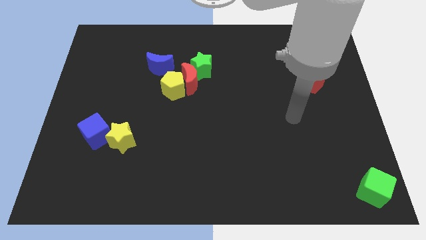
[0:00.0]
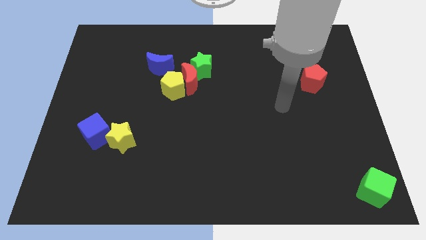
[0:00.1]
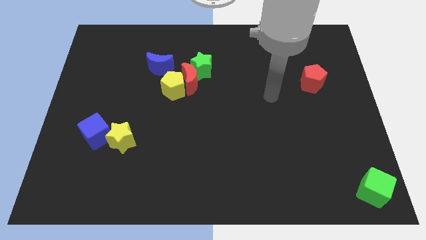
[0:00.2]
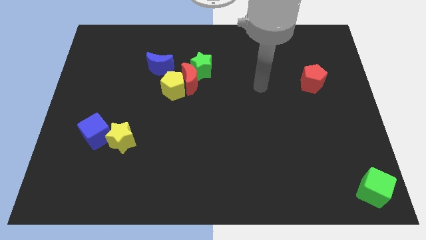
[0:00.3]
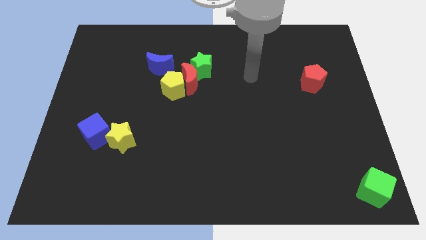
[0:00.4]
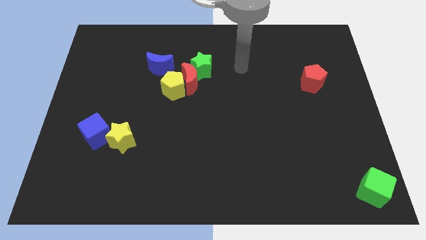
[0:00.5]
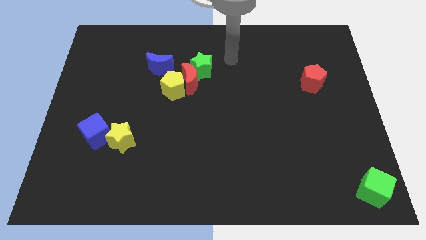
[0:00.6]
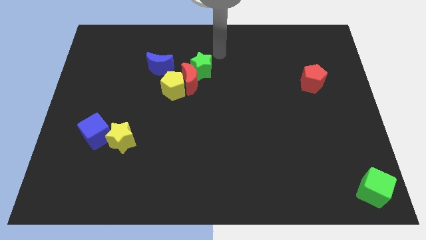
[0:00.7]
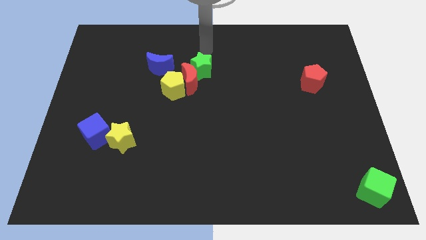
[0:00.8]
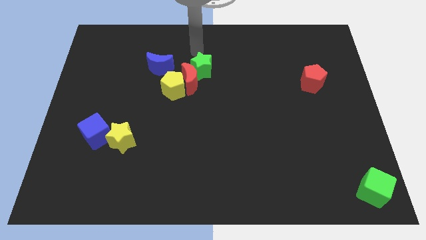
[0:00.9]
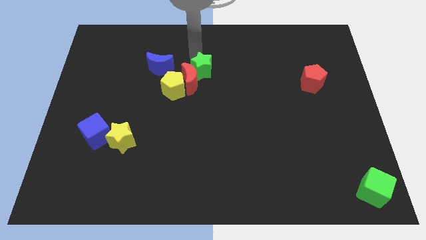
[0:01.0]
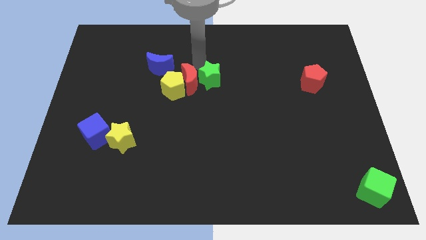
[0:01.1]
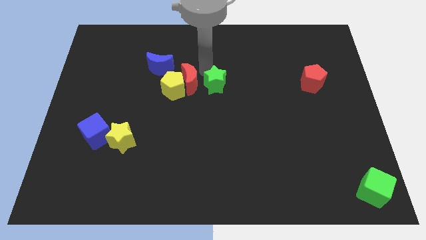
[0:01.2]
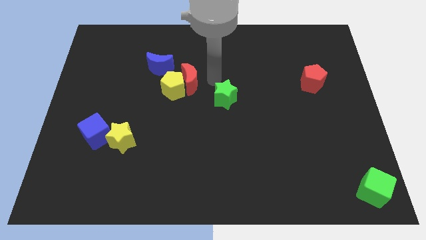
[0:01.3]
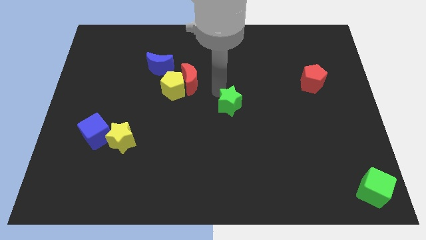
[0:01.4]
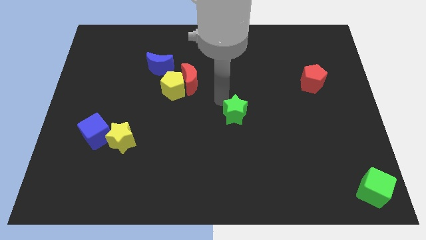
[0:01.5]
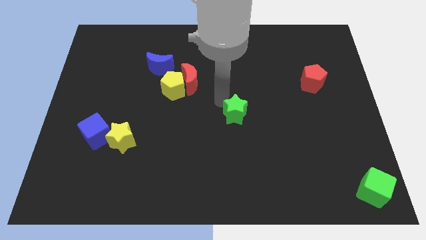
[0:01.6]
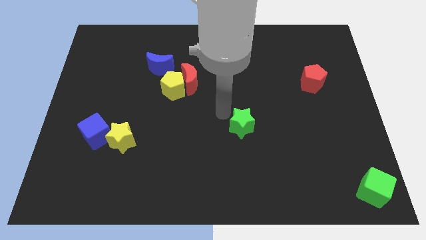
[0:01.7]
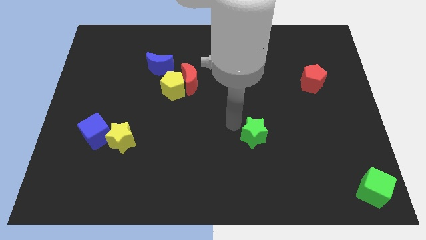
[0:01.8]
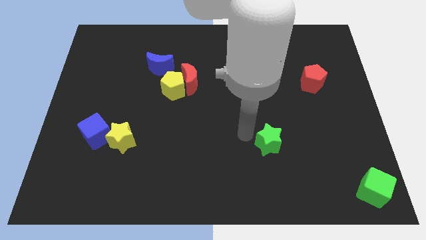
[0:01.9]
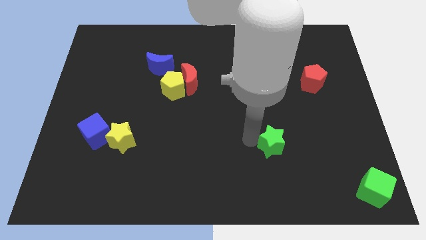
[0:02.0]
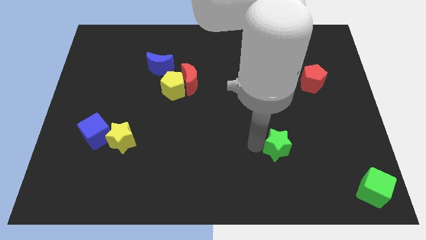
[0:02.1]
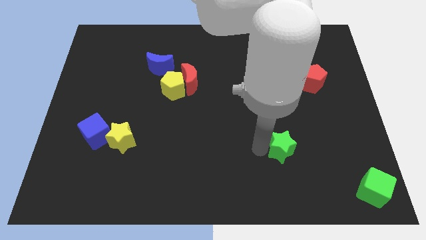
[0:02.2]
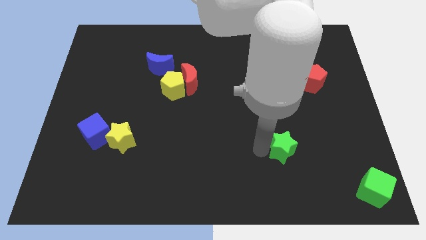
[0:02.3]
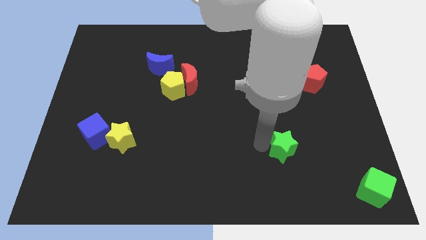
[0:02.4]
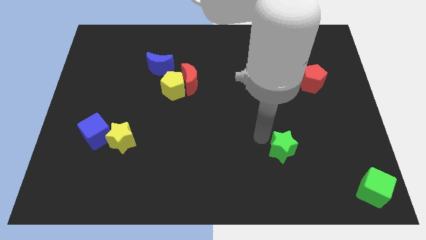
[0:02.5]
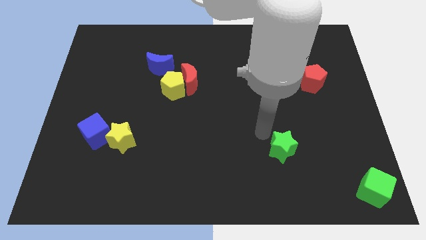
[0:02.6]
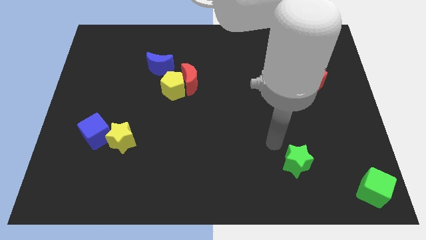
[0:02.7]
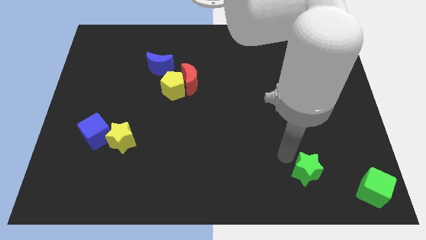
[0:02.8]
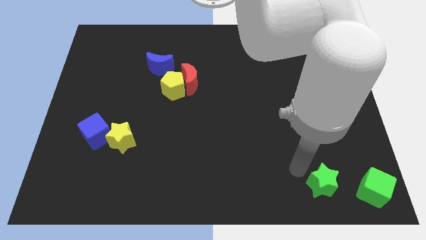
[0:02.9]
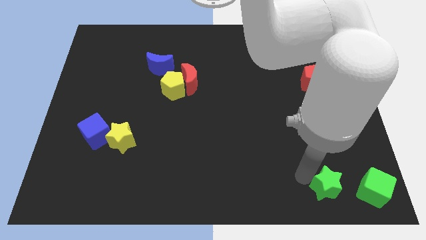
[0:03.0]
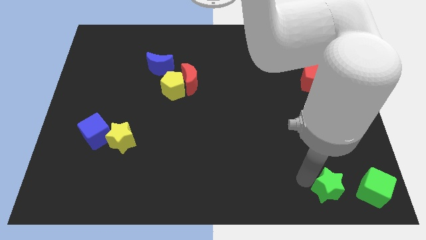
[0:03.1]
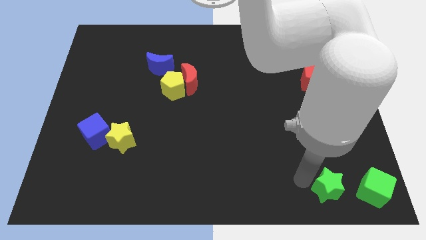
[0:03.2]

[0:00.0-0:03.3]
push the green star towards the bottom right of the board

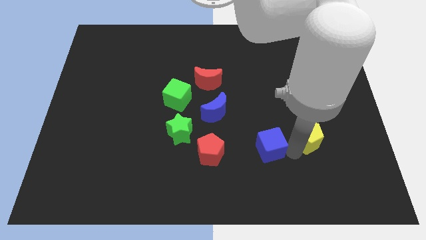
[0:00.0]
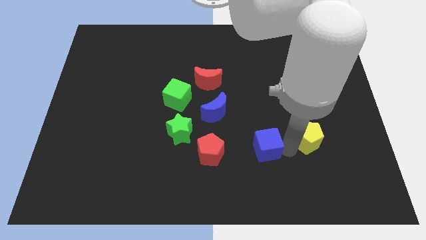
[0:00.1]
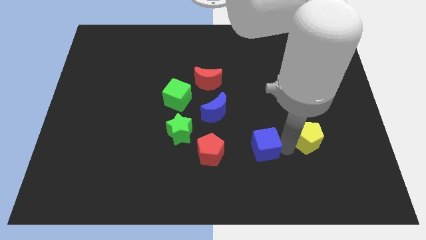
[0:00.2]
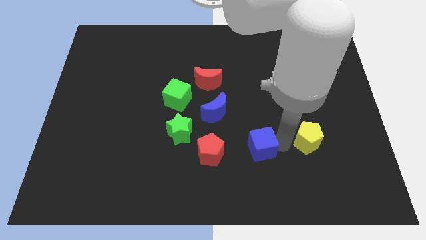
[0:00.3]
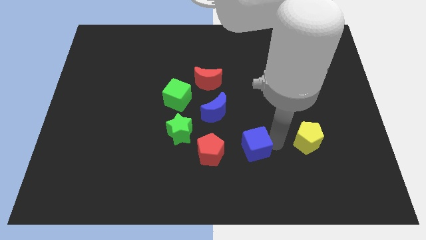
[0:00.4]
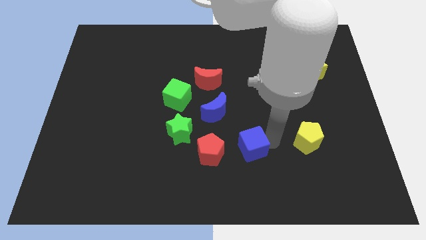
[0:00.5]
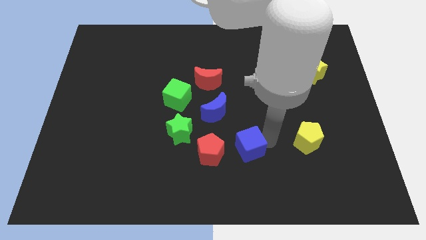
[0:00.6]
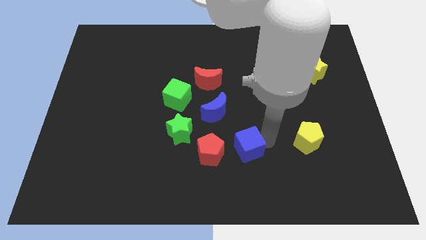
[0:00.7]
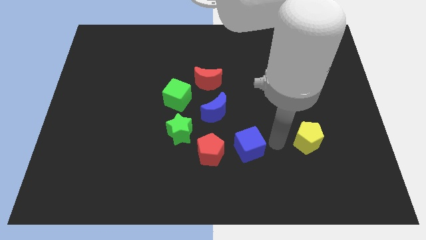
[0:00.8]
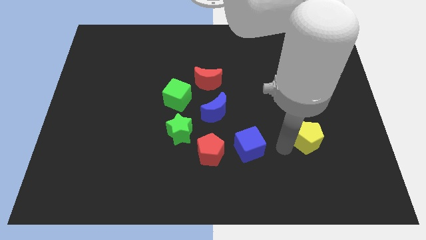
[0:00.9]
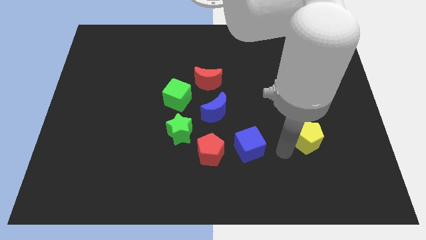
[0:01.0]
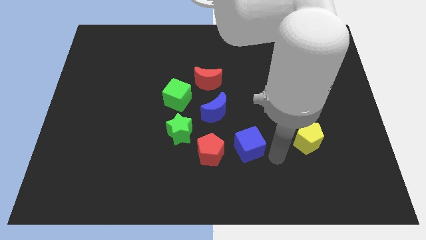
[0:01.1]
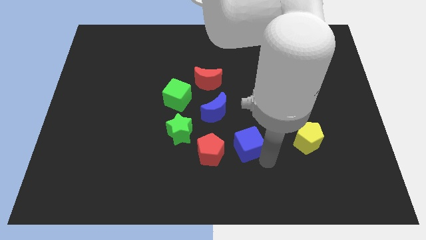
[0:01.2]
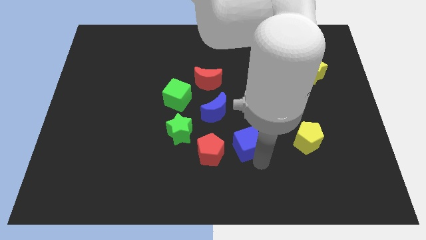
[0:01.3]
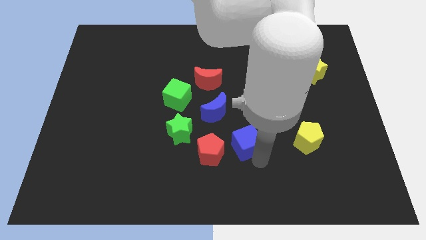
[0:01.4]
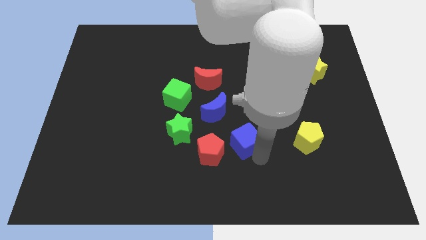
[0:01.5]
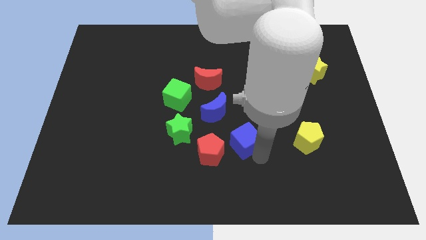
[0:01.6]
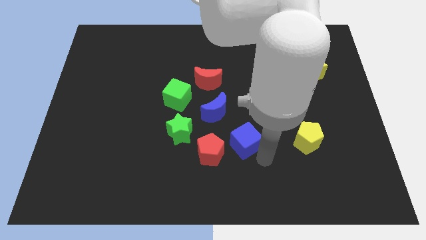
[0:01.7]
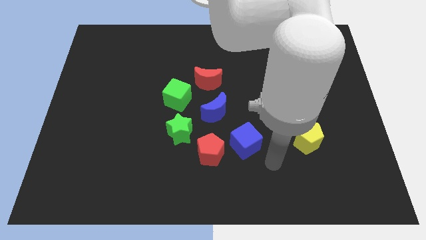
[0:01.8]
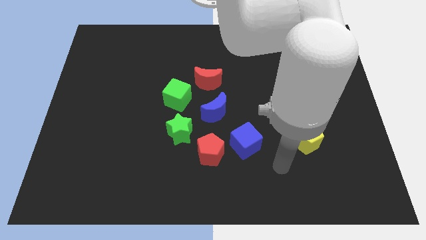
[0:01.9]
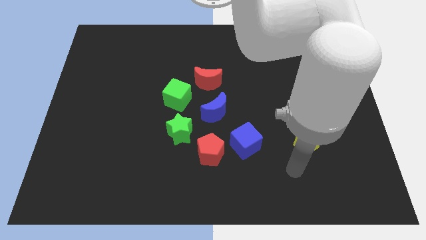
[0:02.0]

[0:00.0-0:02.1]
move blue cube to the left of red pentagon

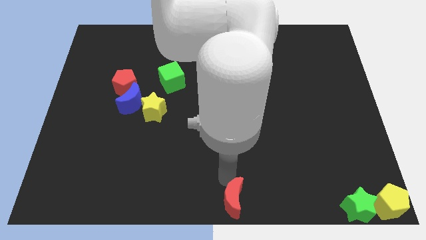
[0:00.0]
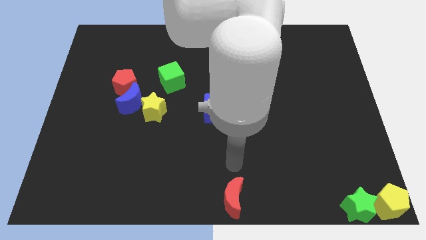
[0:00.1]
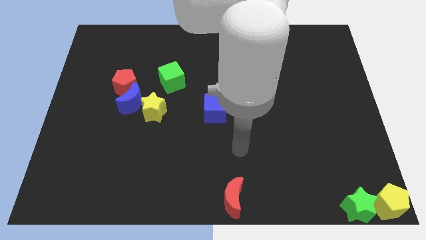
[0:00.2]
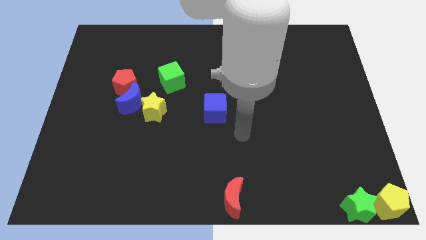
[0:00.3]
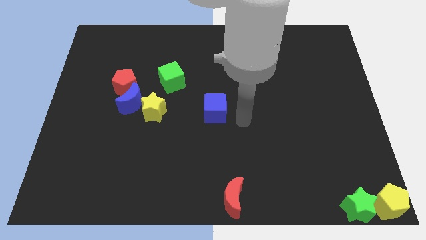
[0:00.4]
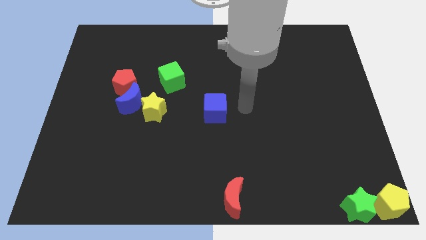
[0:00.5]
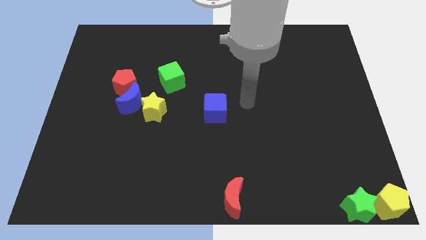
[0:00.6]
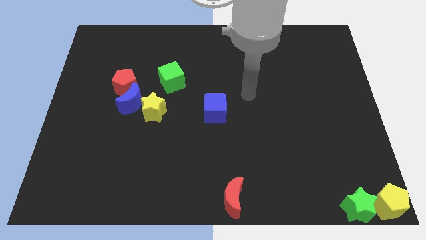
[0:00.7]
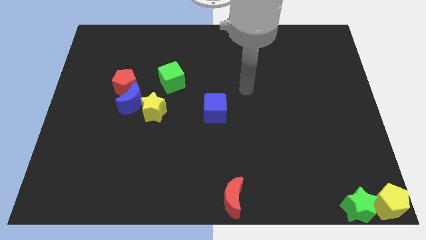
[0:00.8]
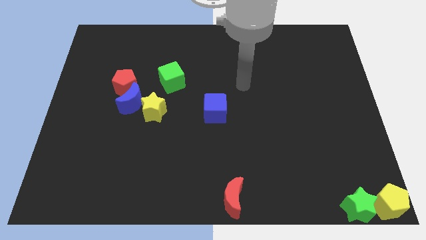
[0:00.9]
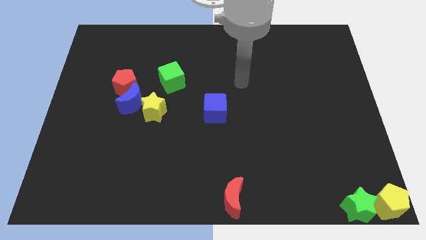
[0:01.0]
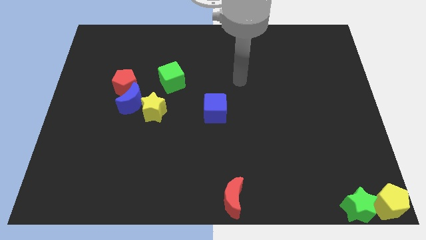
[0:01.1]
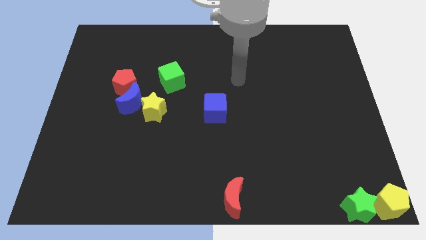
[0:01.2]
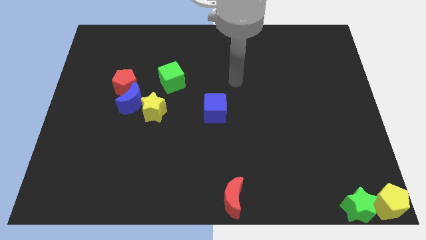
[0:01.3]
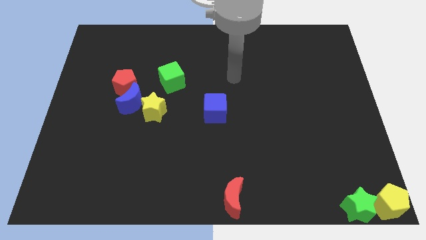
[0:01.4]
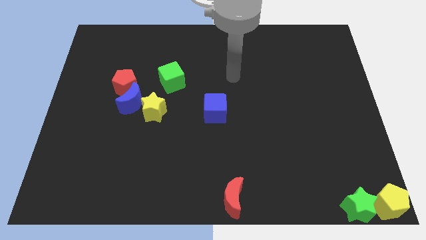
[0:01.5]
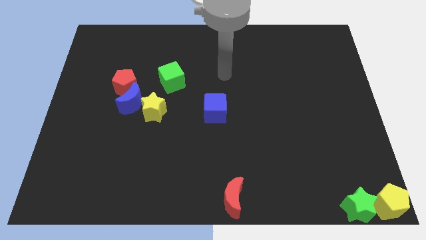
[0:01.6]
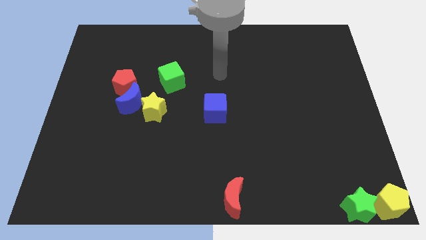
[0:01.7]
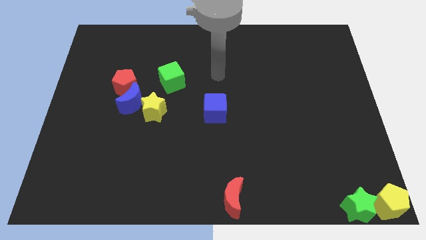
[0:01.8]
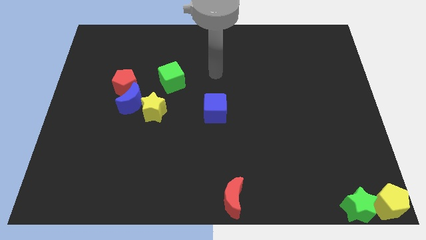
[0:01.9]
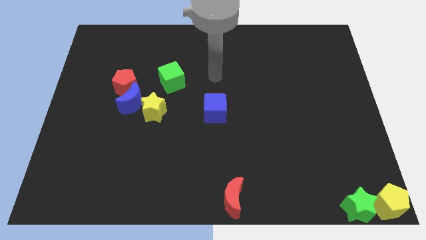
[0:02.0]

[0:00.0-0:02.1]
move your arm to the center of the board

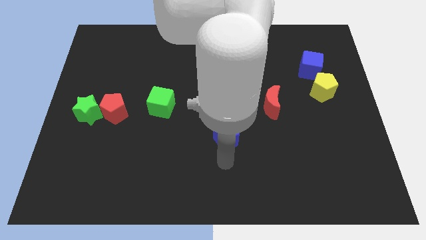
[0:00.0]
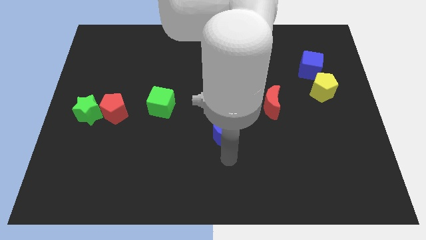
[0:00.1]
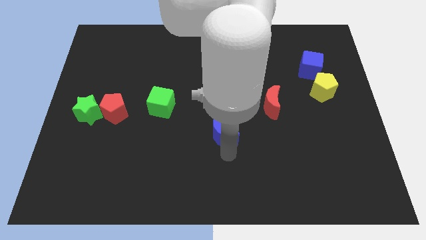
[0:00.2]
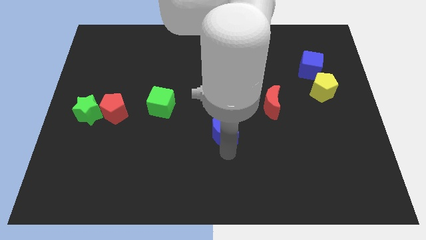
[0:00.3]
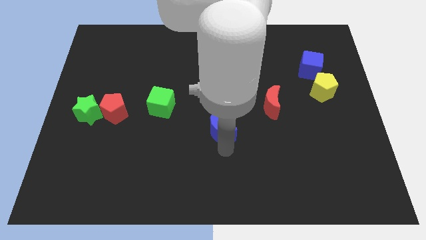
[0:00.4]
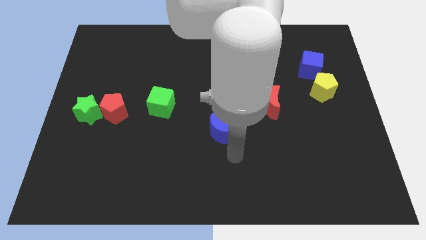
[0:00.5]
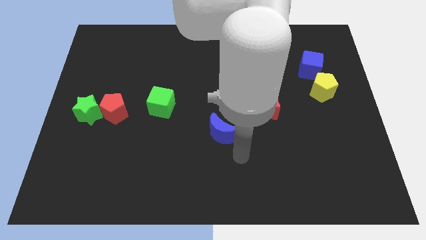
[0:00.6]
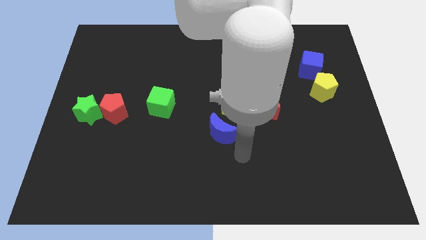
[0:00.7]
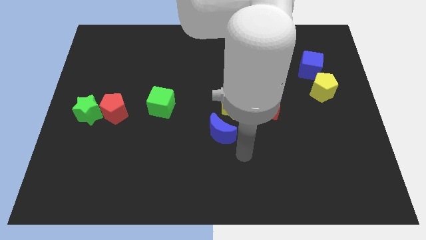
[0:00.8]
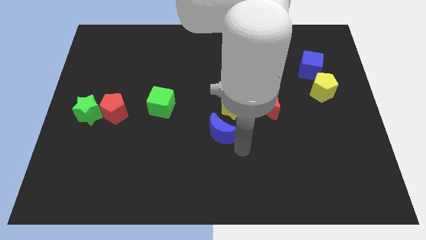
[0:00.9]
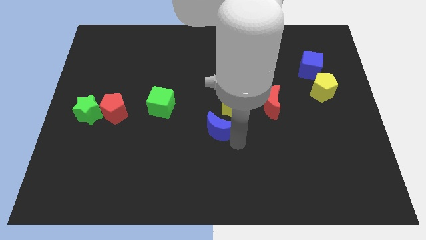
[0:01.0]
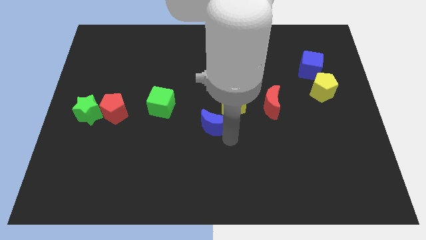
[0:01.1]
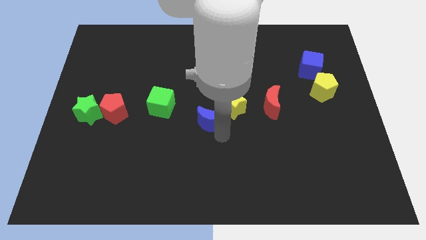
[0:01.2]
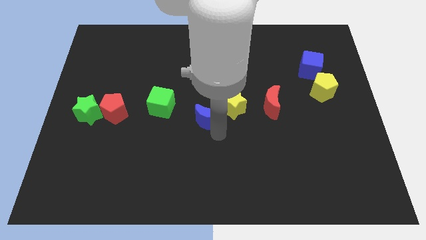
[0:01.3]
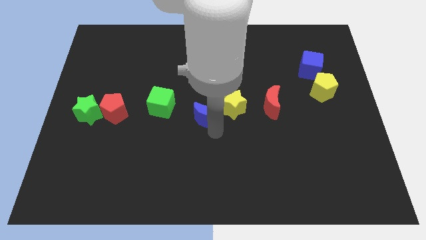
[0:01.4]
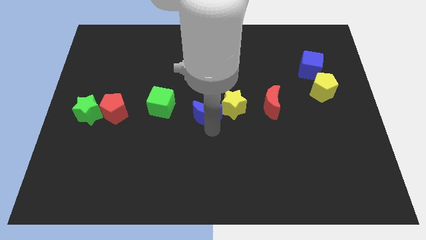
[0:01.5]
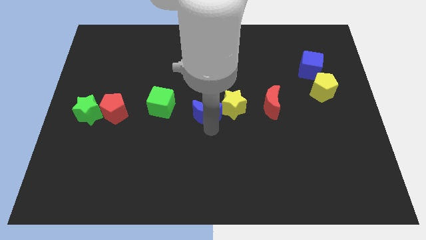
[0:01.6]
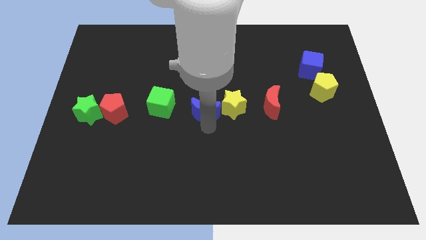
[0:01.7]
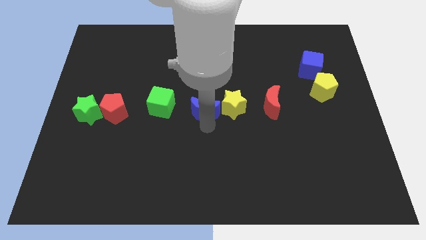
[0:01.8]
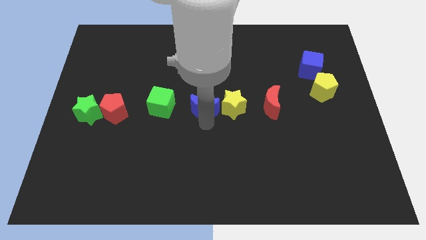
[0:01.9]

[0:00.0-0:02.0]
move the blue moon to the left of the yellow star
